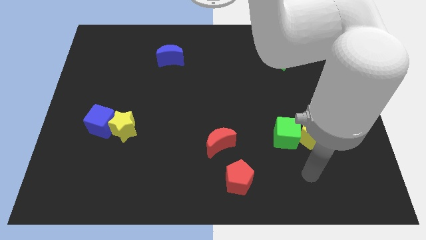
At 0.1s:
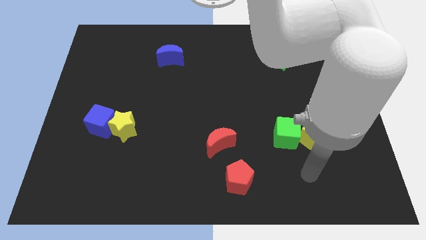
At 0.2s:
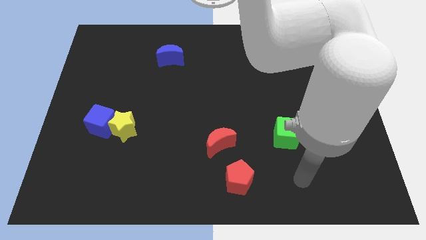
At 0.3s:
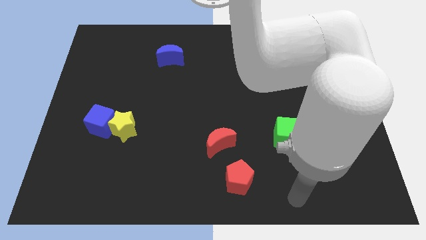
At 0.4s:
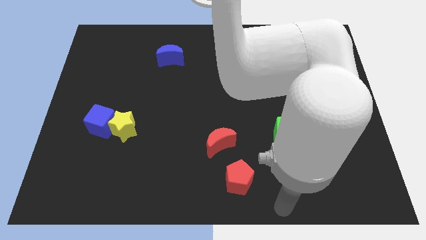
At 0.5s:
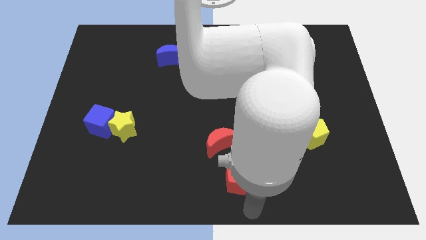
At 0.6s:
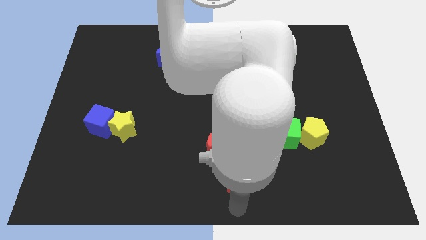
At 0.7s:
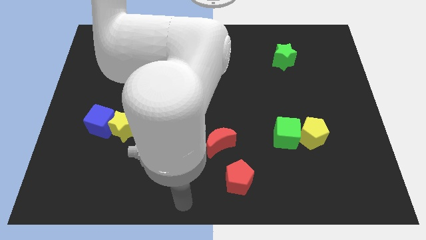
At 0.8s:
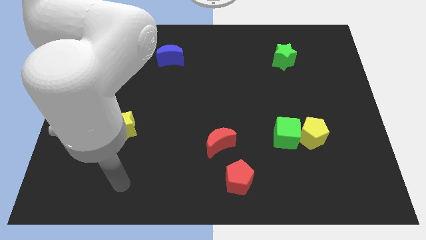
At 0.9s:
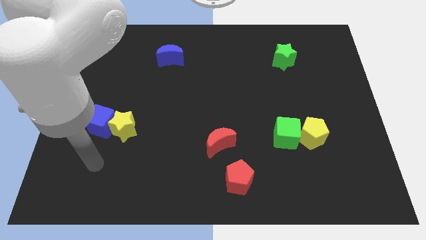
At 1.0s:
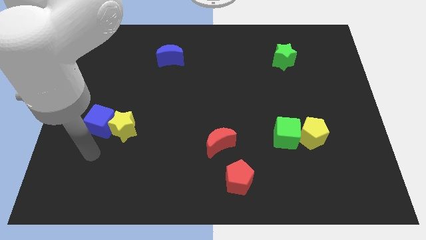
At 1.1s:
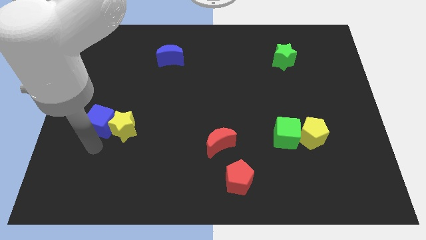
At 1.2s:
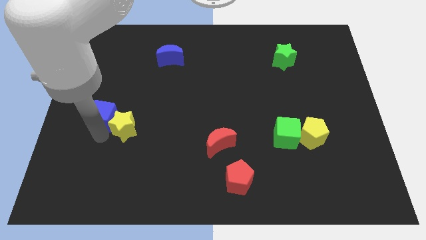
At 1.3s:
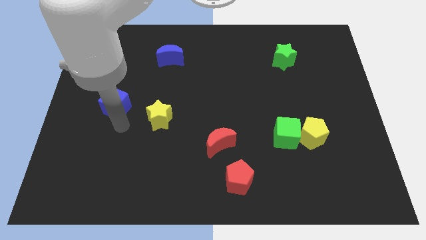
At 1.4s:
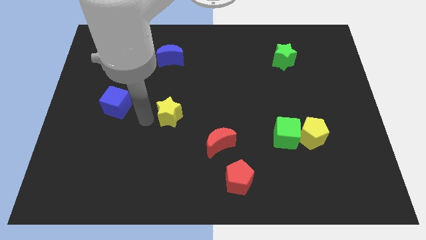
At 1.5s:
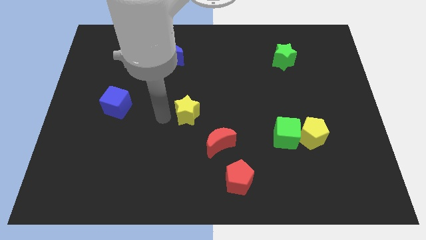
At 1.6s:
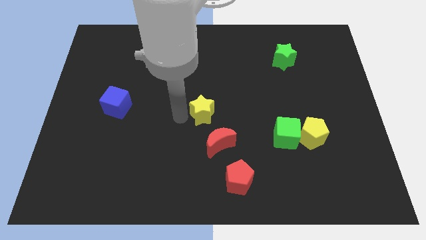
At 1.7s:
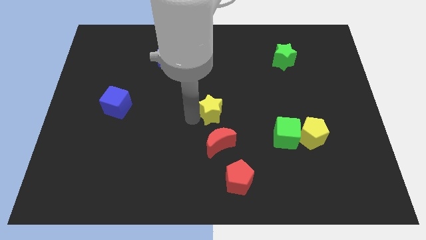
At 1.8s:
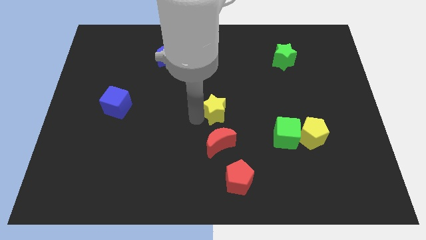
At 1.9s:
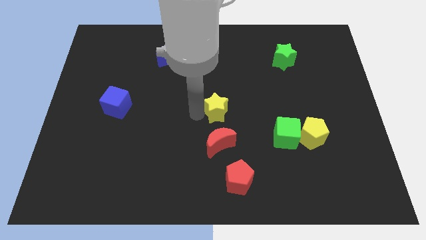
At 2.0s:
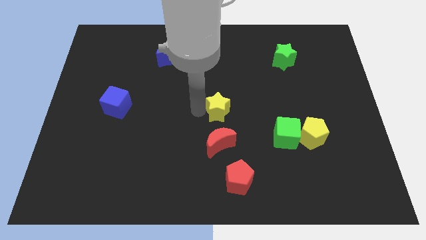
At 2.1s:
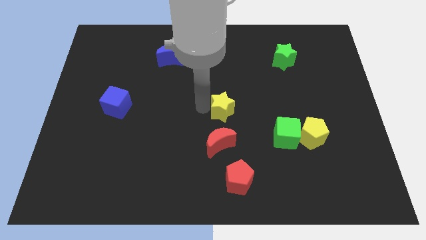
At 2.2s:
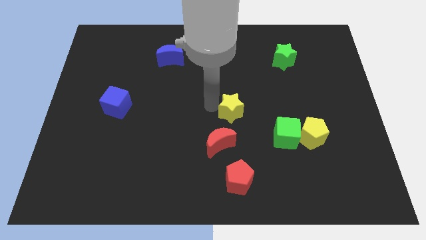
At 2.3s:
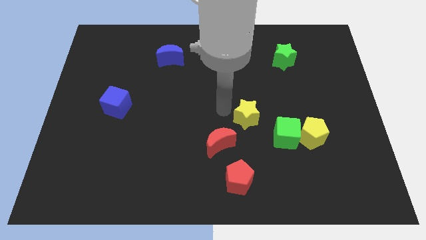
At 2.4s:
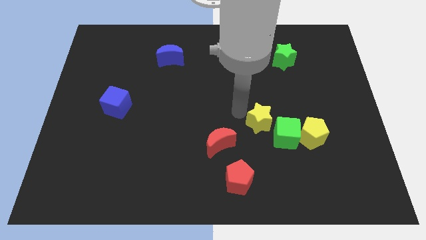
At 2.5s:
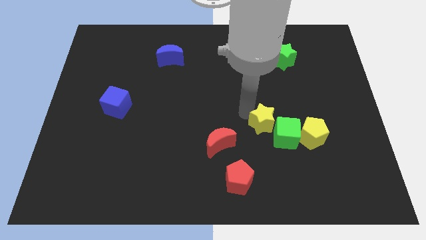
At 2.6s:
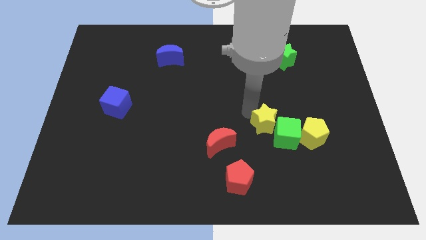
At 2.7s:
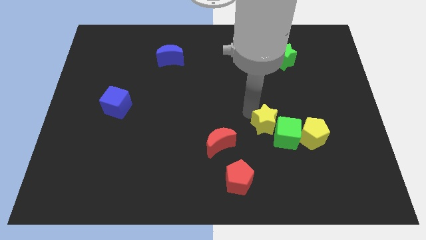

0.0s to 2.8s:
push the yellow star to the green cube

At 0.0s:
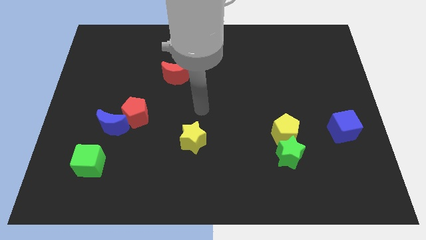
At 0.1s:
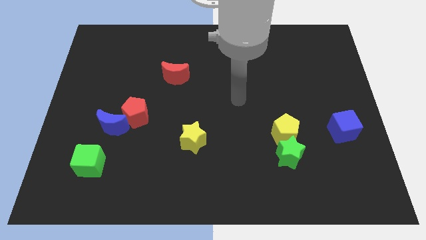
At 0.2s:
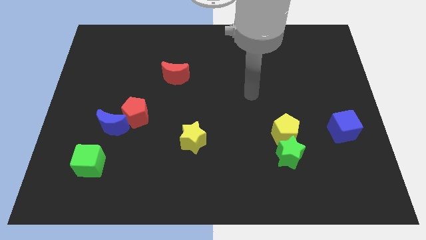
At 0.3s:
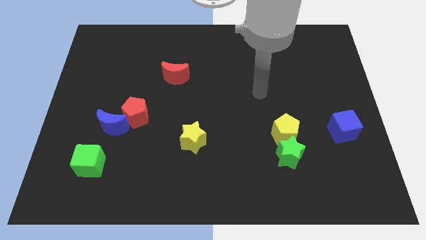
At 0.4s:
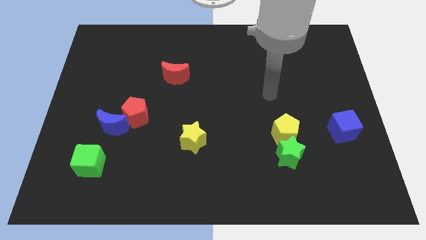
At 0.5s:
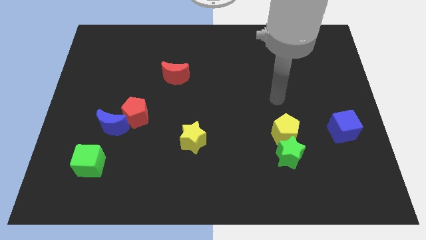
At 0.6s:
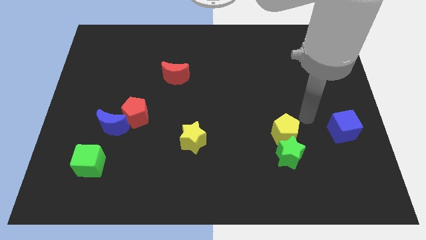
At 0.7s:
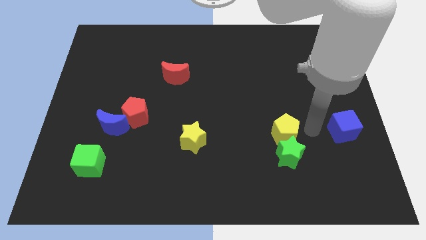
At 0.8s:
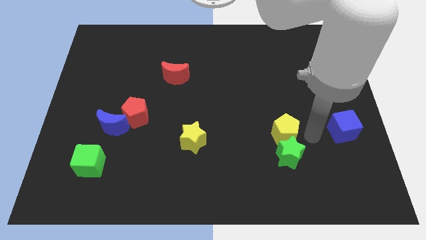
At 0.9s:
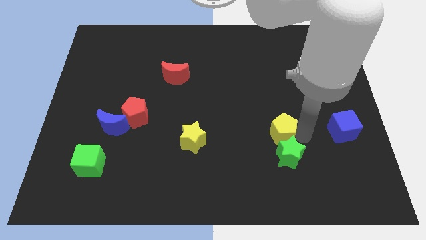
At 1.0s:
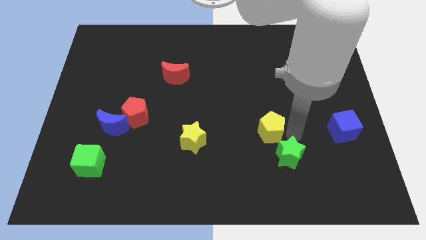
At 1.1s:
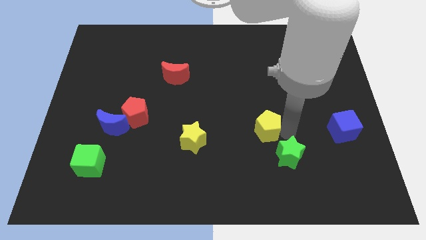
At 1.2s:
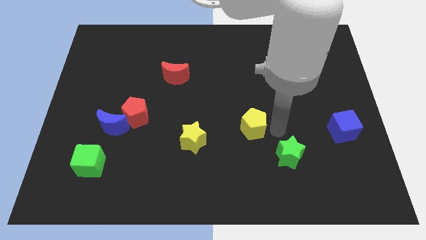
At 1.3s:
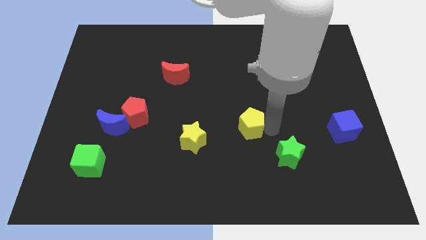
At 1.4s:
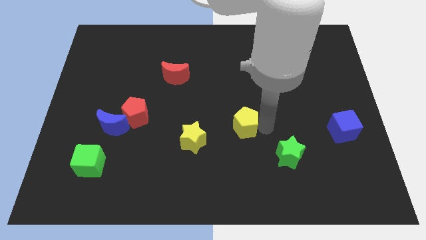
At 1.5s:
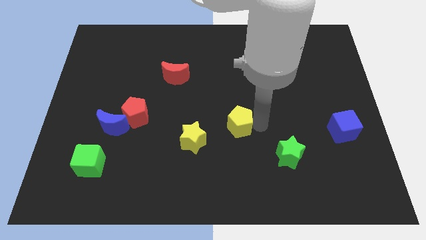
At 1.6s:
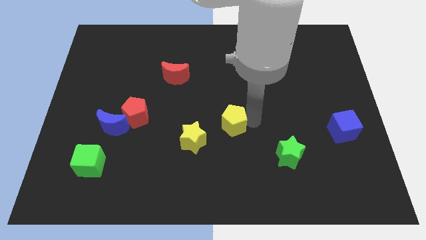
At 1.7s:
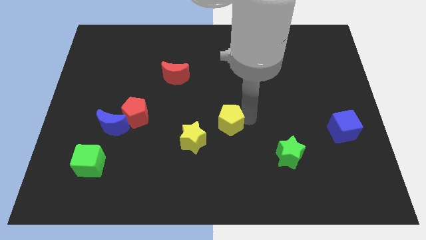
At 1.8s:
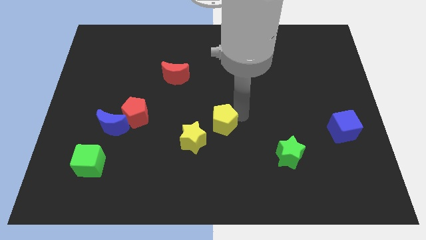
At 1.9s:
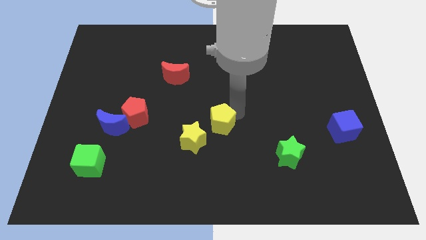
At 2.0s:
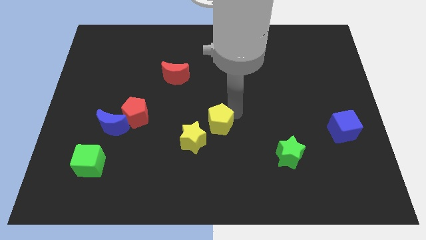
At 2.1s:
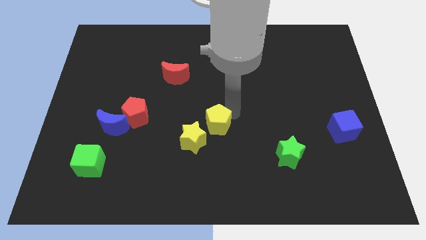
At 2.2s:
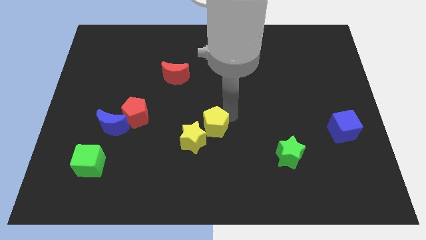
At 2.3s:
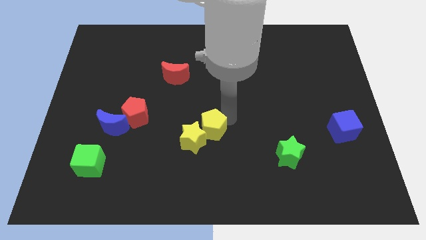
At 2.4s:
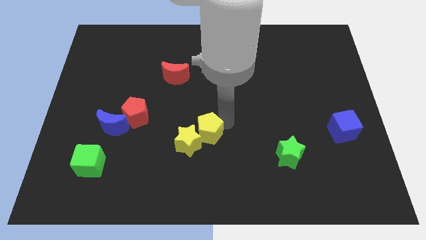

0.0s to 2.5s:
move the yellow pentagon towards the yellow star

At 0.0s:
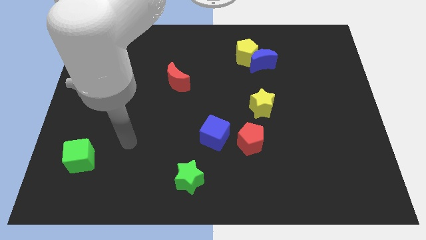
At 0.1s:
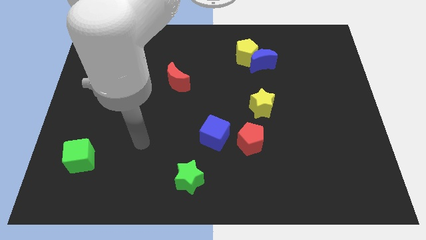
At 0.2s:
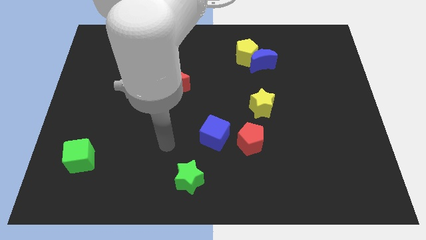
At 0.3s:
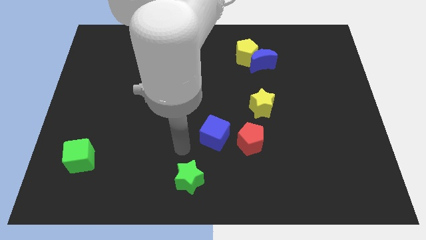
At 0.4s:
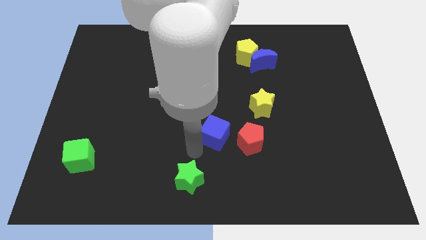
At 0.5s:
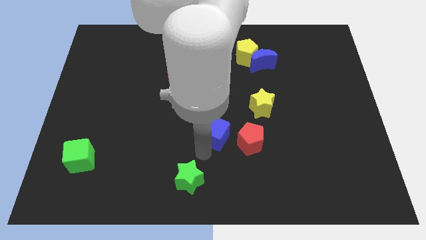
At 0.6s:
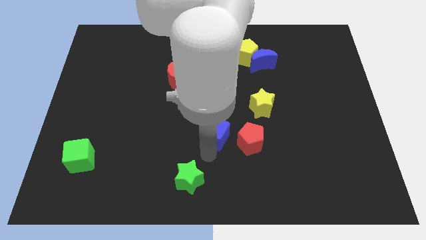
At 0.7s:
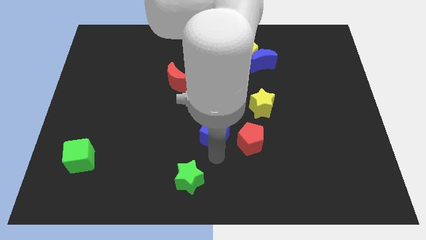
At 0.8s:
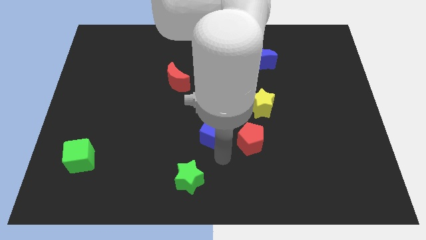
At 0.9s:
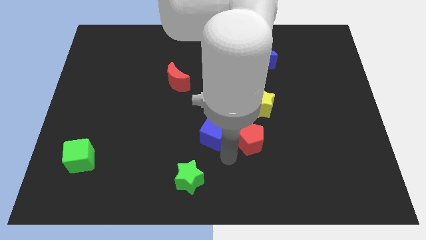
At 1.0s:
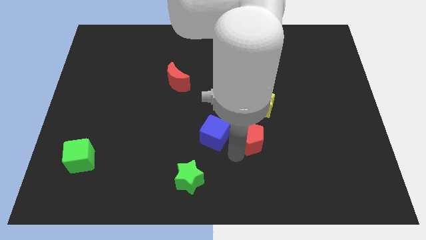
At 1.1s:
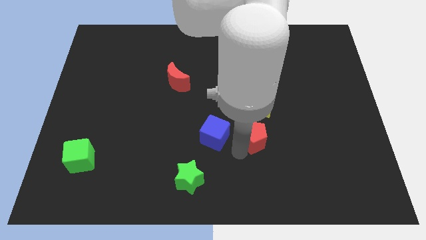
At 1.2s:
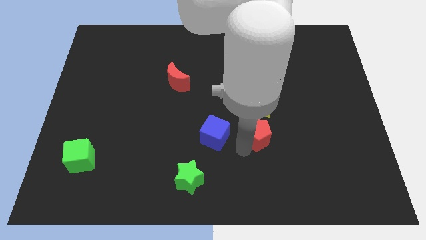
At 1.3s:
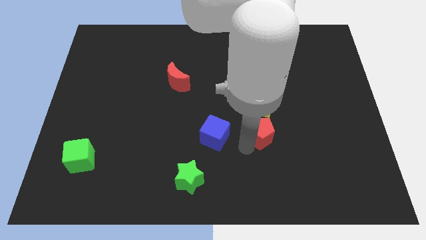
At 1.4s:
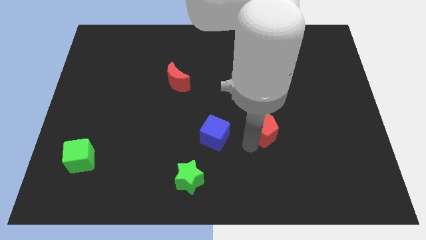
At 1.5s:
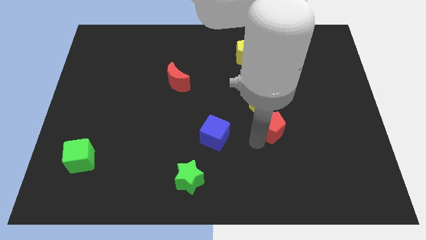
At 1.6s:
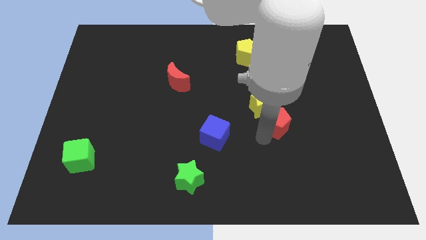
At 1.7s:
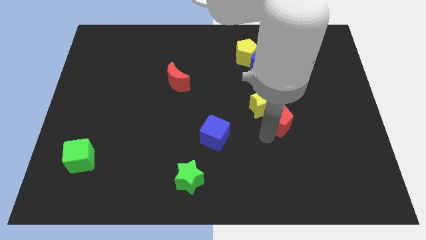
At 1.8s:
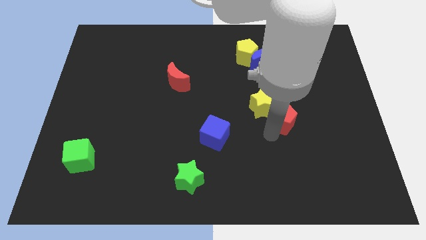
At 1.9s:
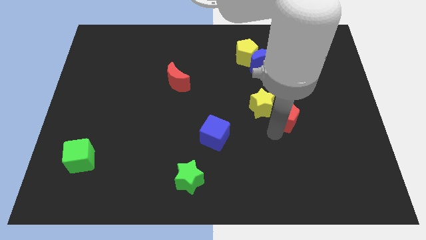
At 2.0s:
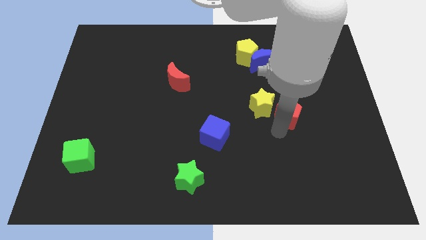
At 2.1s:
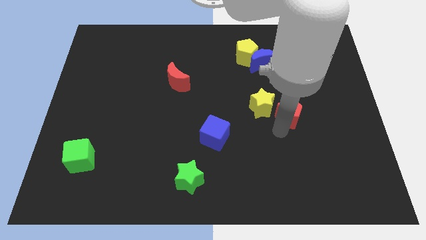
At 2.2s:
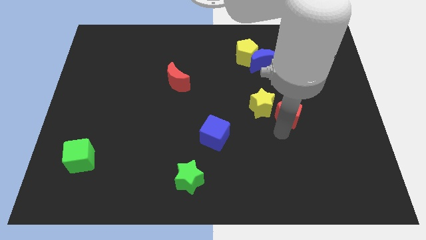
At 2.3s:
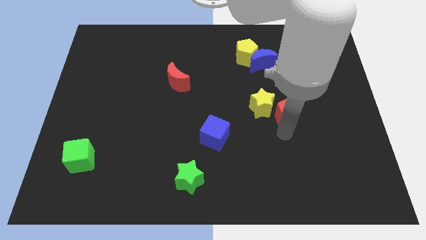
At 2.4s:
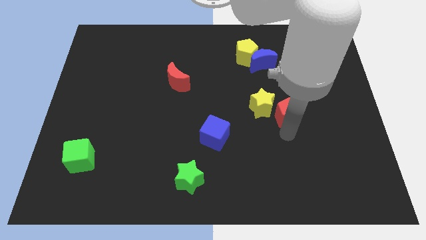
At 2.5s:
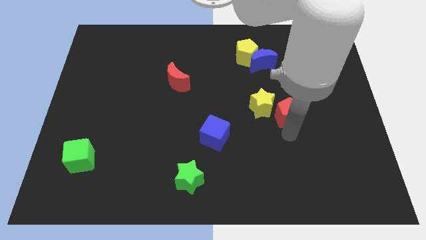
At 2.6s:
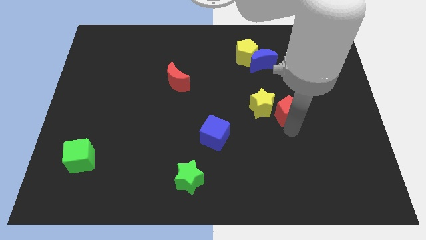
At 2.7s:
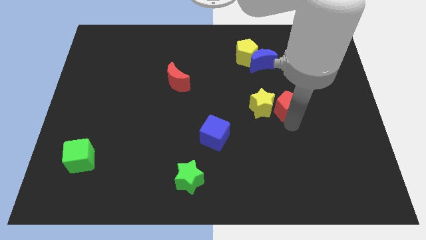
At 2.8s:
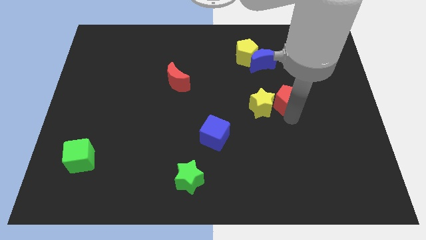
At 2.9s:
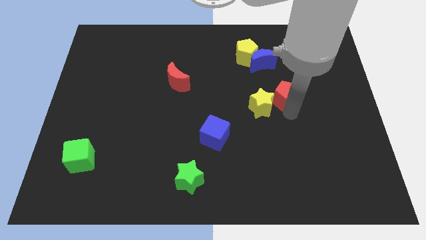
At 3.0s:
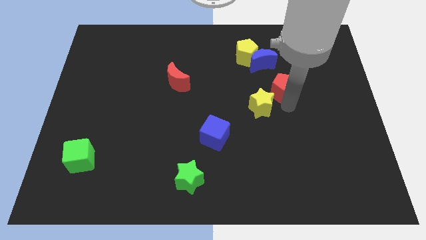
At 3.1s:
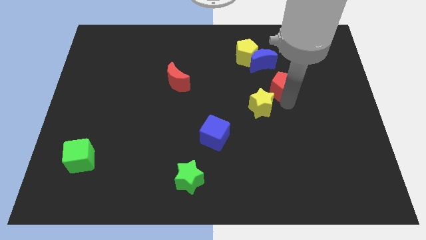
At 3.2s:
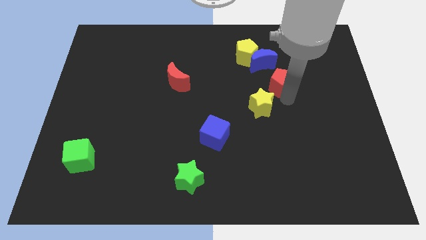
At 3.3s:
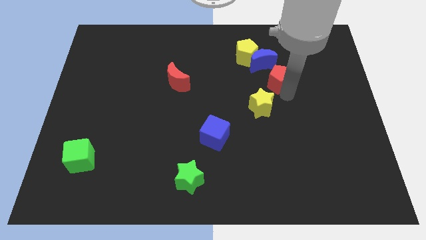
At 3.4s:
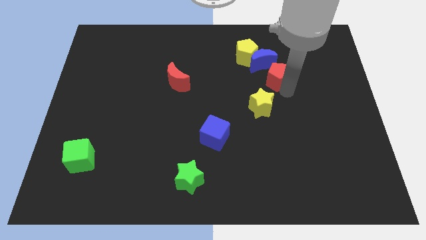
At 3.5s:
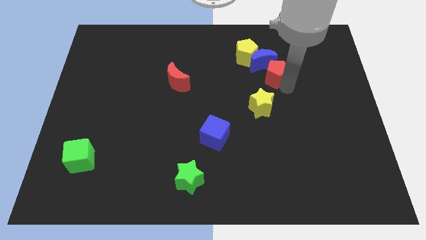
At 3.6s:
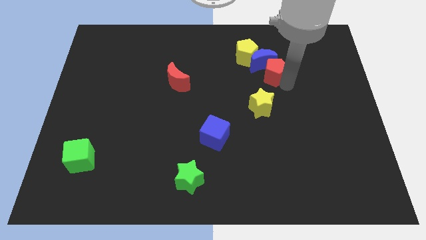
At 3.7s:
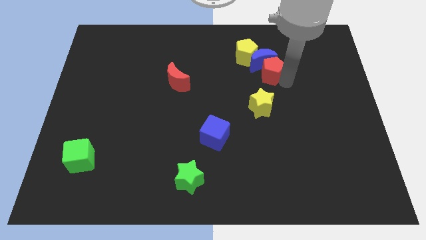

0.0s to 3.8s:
put the red pentagon to the blue moon
